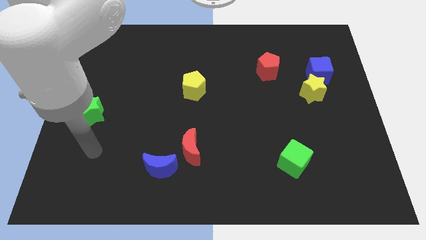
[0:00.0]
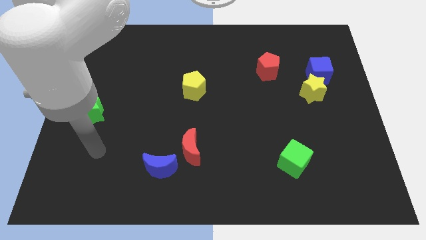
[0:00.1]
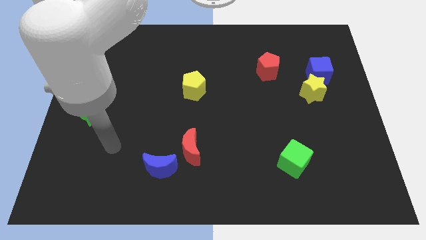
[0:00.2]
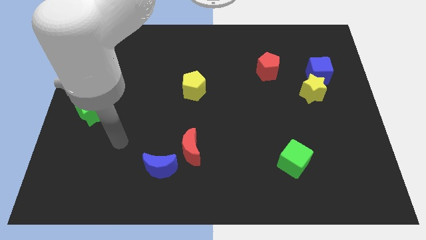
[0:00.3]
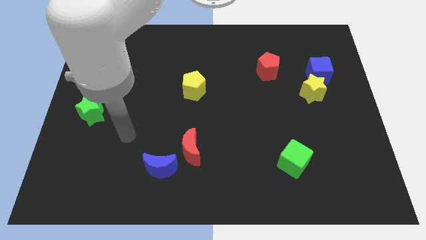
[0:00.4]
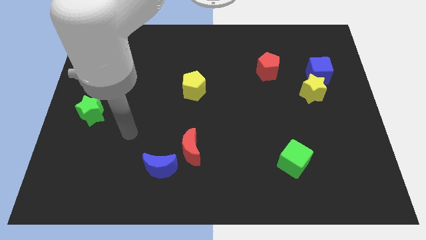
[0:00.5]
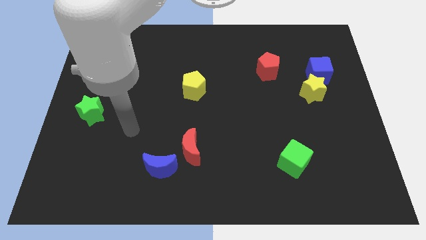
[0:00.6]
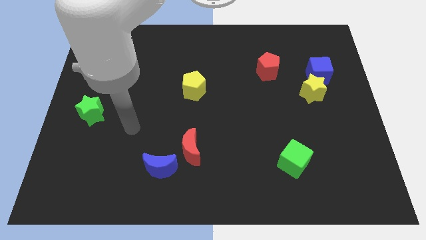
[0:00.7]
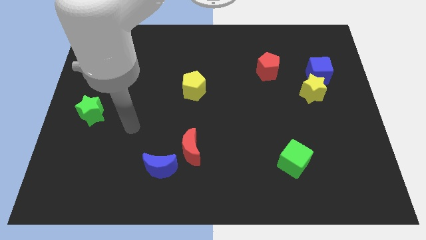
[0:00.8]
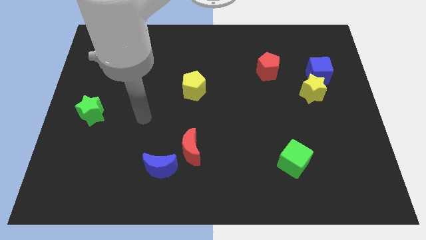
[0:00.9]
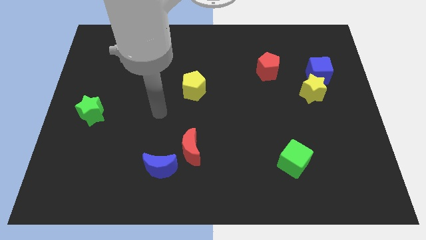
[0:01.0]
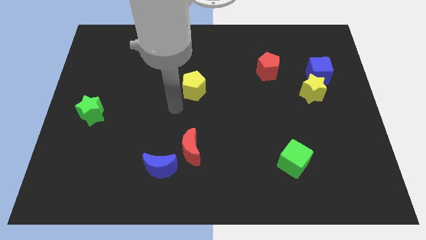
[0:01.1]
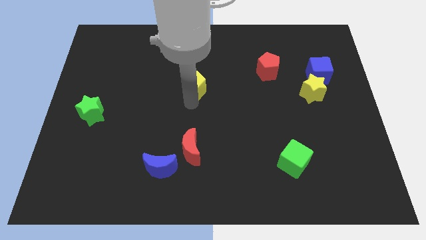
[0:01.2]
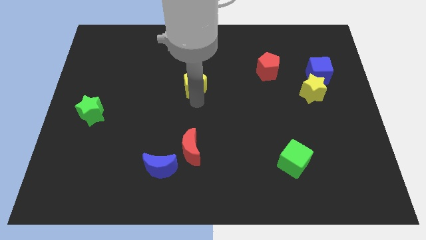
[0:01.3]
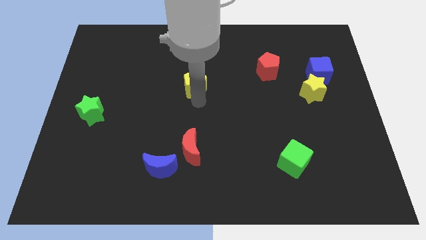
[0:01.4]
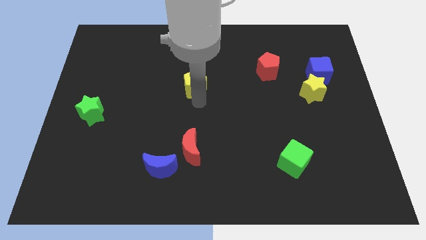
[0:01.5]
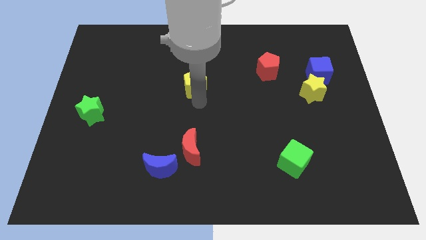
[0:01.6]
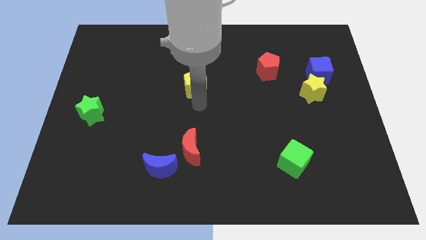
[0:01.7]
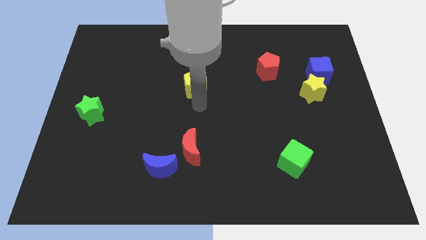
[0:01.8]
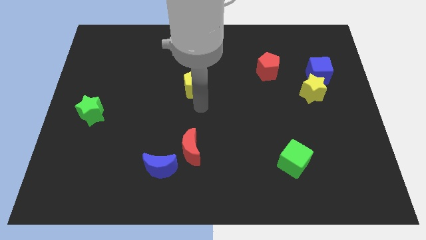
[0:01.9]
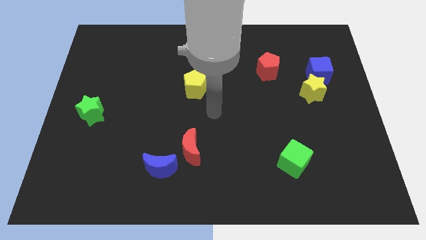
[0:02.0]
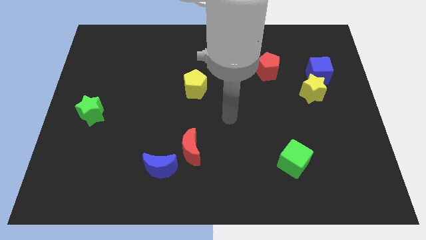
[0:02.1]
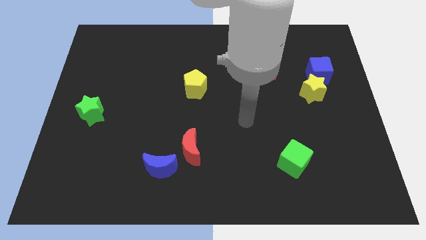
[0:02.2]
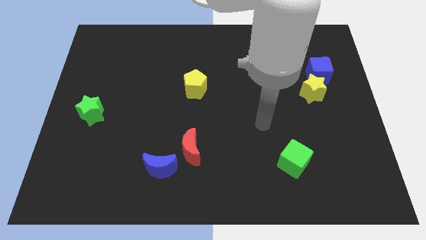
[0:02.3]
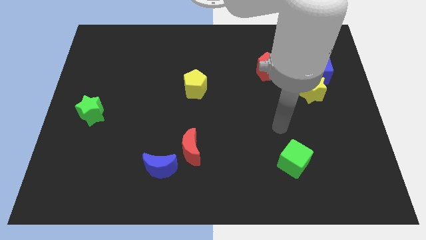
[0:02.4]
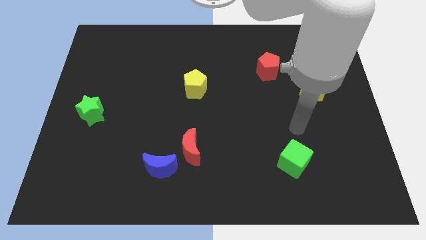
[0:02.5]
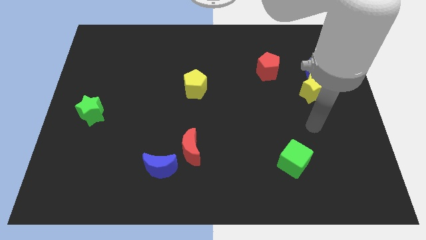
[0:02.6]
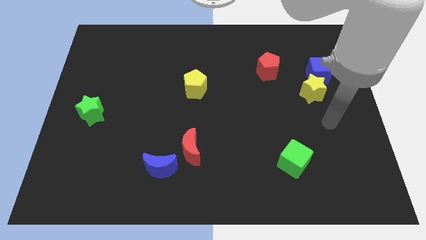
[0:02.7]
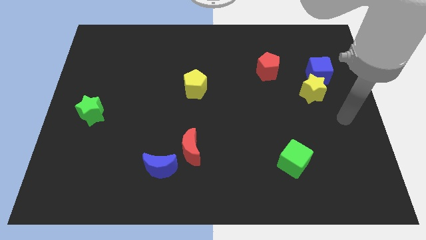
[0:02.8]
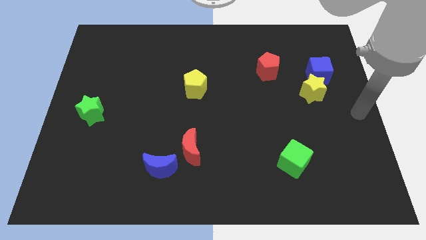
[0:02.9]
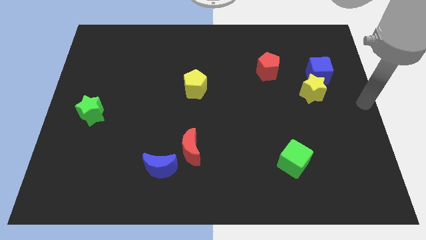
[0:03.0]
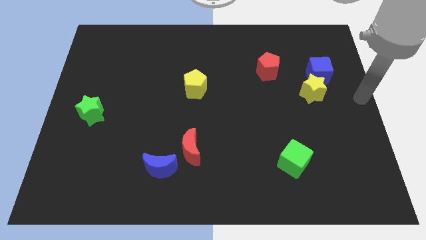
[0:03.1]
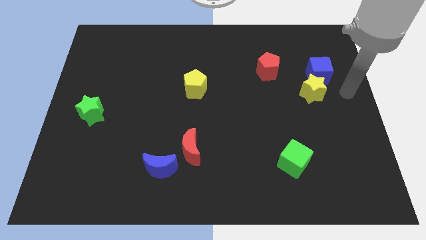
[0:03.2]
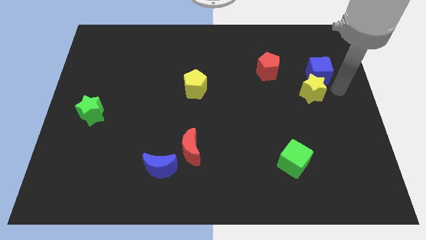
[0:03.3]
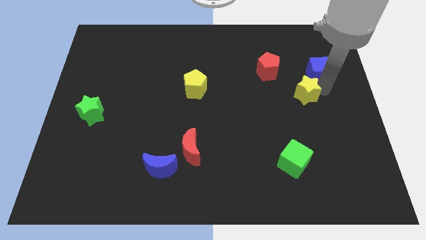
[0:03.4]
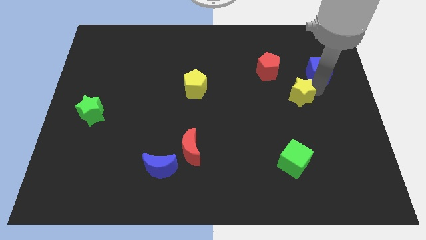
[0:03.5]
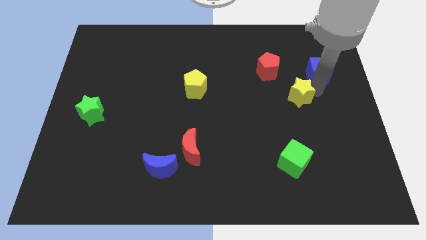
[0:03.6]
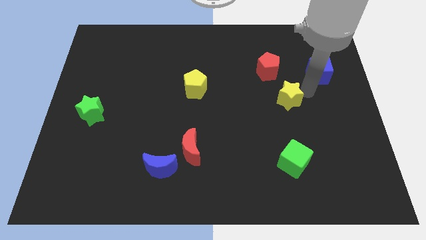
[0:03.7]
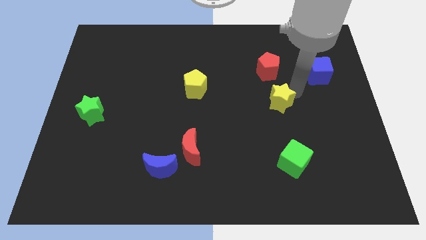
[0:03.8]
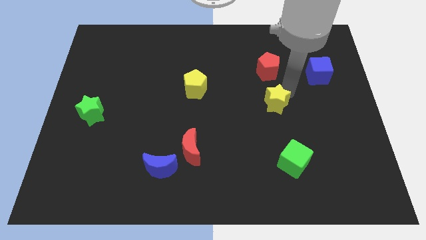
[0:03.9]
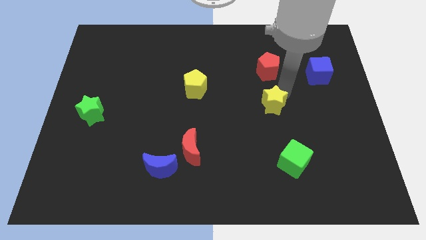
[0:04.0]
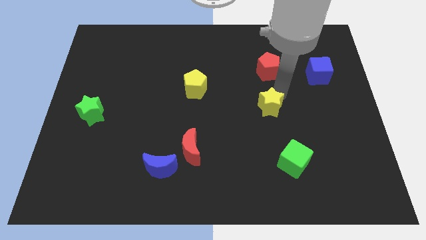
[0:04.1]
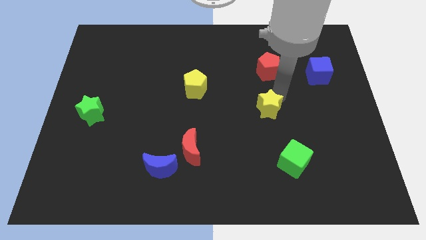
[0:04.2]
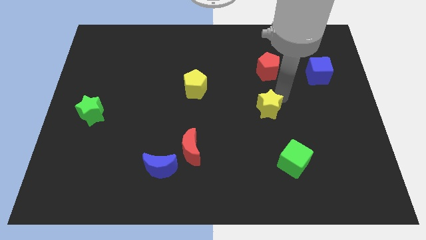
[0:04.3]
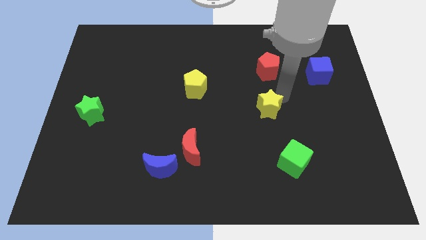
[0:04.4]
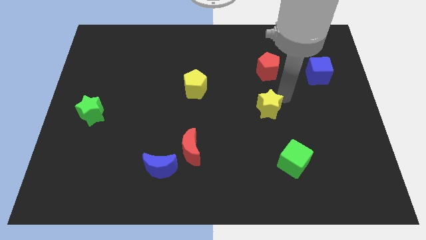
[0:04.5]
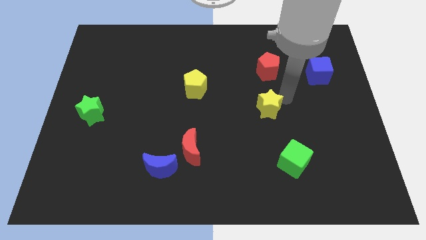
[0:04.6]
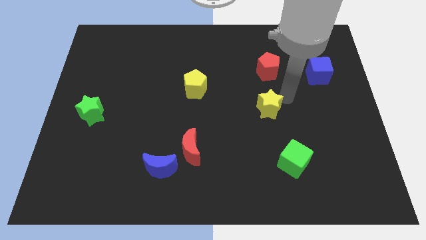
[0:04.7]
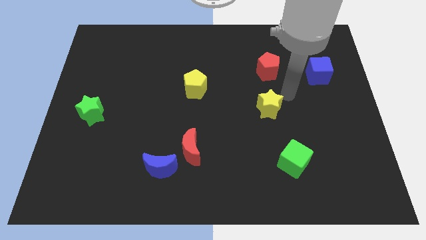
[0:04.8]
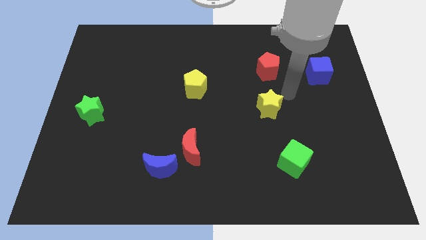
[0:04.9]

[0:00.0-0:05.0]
place the yellow star below the red pentagon

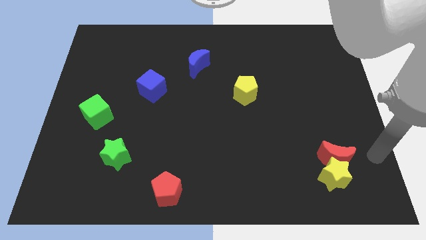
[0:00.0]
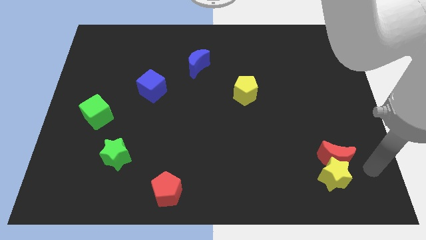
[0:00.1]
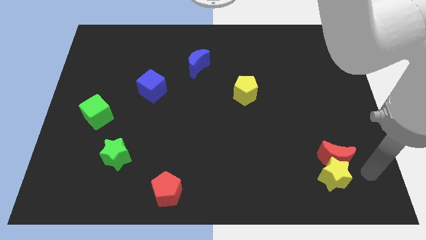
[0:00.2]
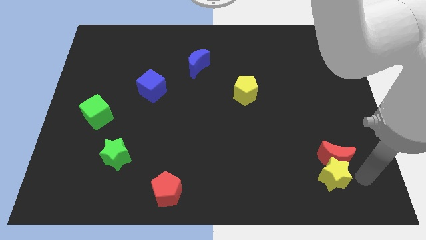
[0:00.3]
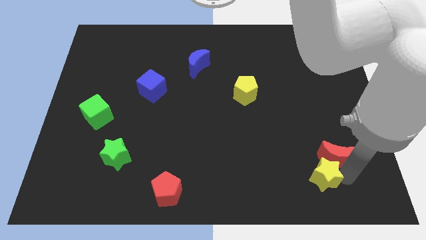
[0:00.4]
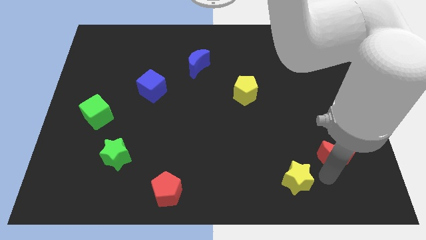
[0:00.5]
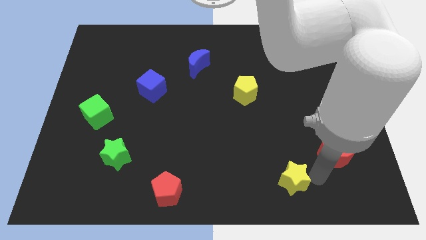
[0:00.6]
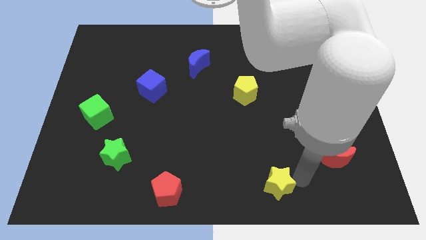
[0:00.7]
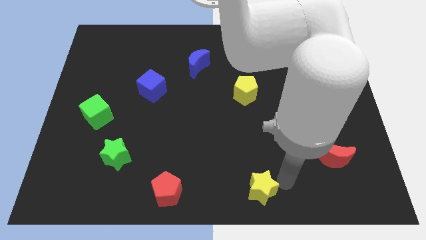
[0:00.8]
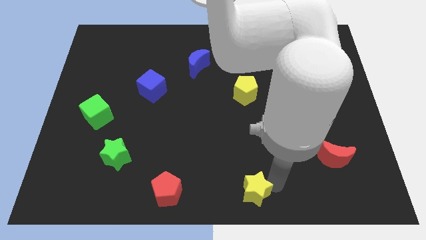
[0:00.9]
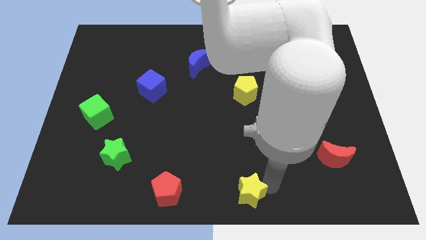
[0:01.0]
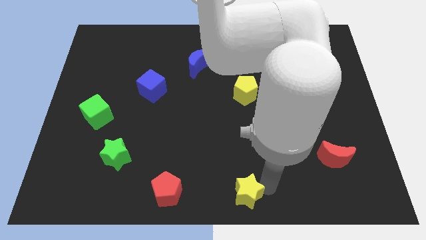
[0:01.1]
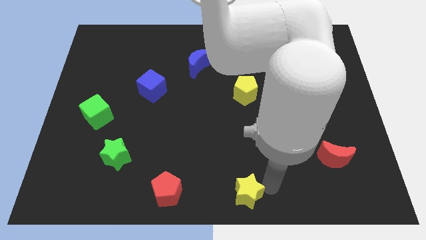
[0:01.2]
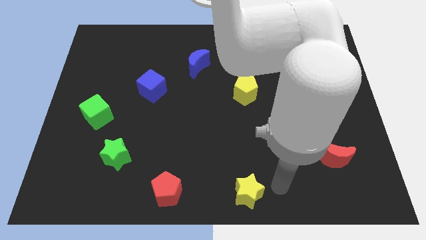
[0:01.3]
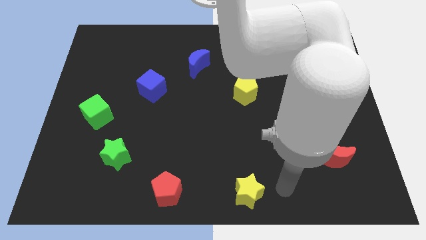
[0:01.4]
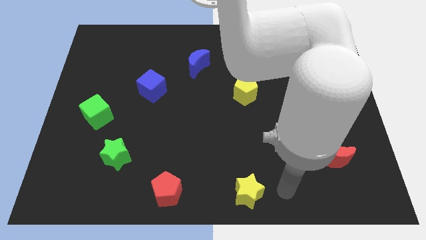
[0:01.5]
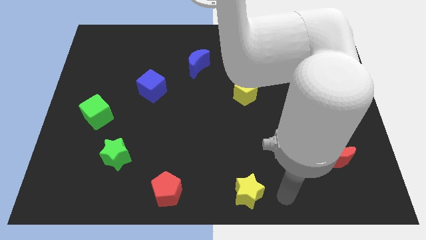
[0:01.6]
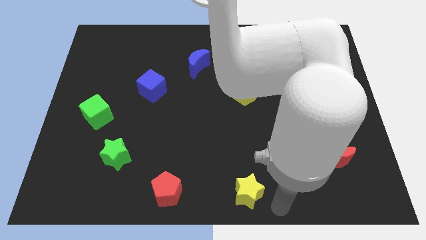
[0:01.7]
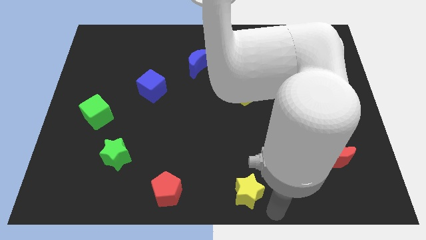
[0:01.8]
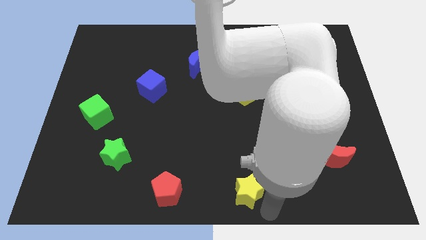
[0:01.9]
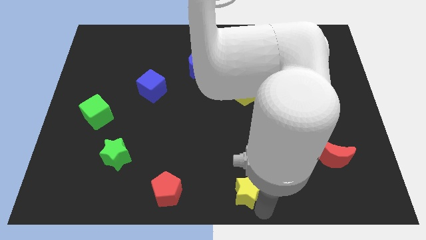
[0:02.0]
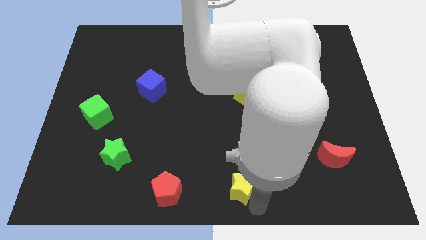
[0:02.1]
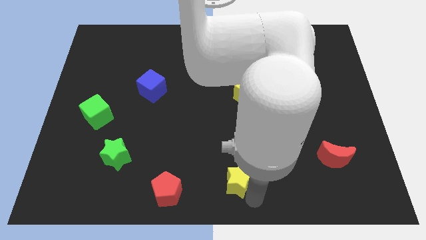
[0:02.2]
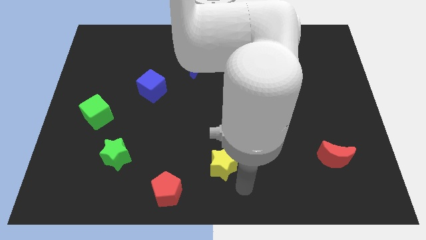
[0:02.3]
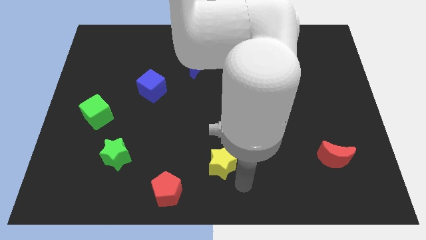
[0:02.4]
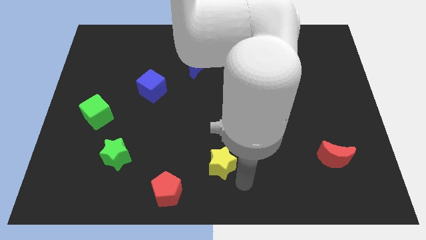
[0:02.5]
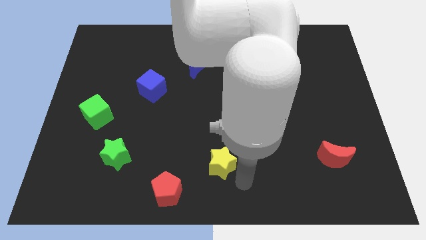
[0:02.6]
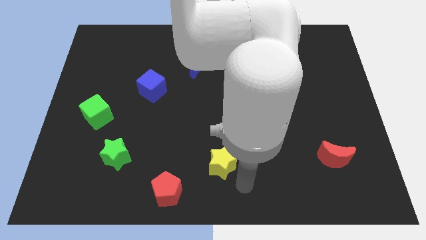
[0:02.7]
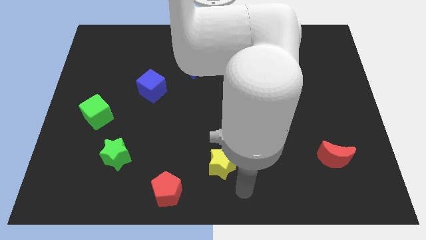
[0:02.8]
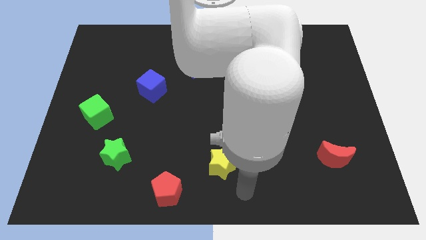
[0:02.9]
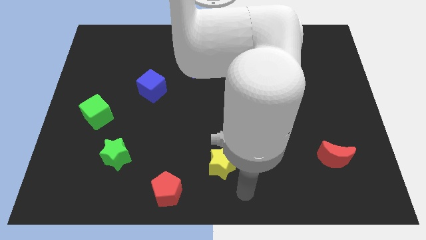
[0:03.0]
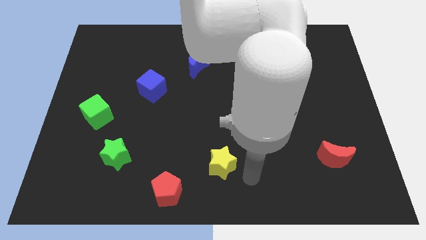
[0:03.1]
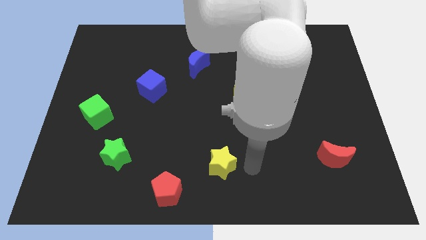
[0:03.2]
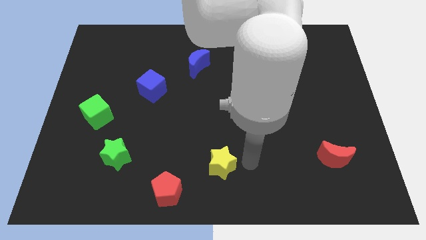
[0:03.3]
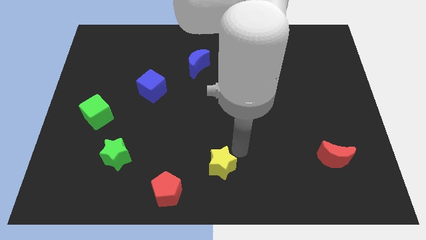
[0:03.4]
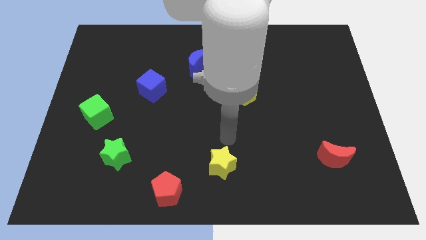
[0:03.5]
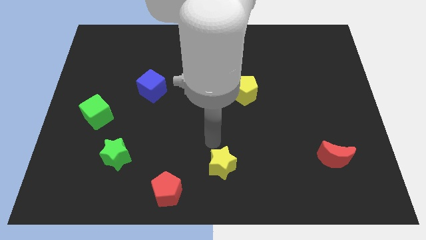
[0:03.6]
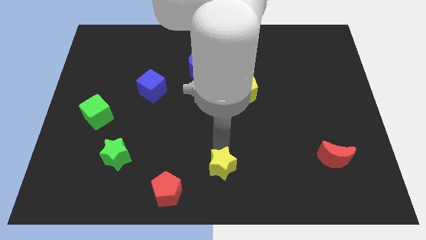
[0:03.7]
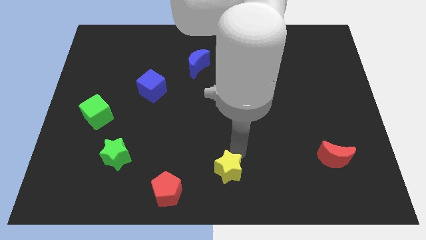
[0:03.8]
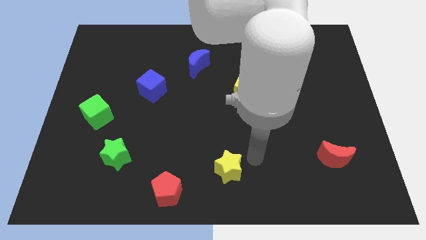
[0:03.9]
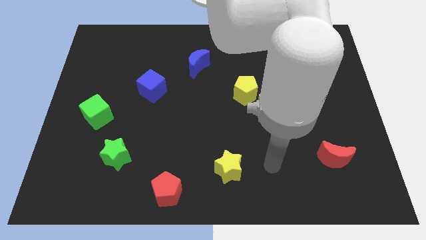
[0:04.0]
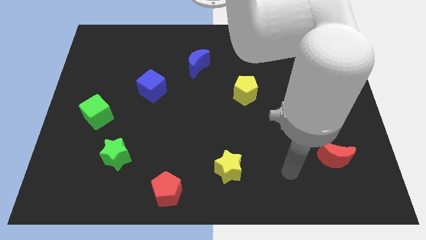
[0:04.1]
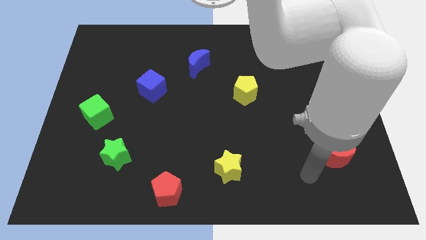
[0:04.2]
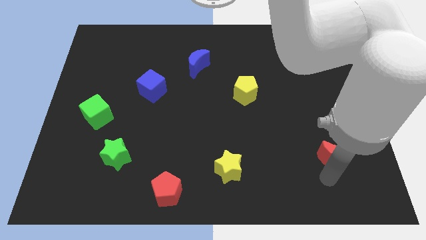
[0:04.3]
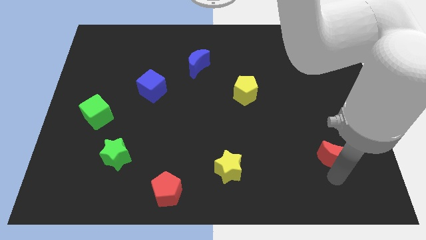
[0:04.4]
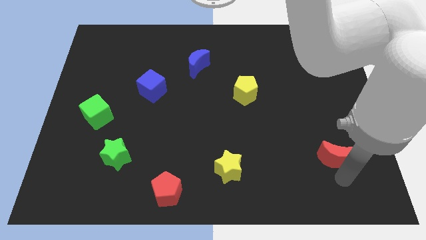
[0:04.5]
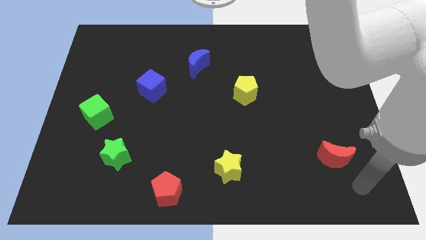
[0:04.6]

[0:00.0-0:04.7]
place the yellow pentagon to the top right of red pentagon
